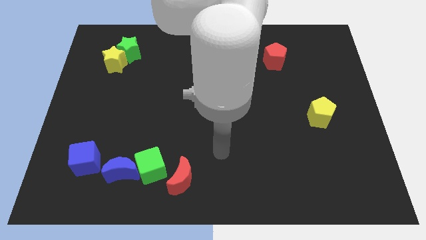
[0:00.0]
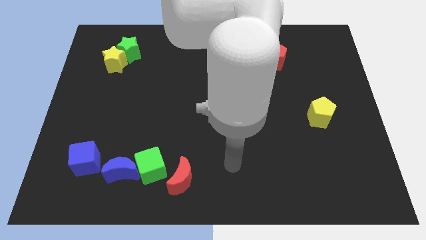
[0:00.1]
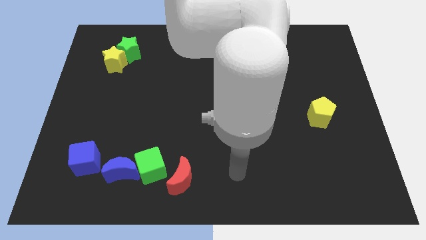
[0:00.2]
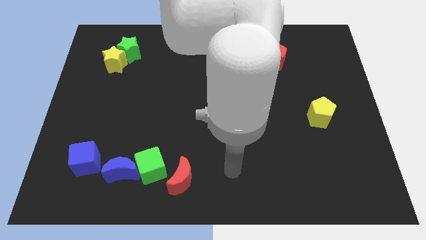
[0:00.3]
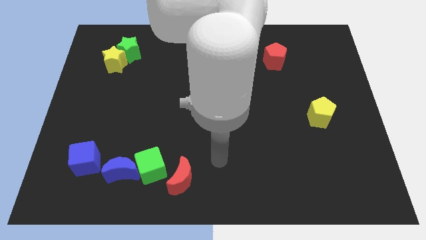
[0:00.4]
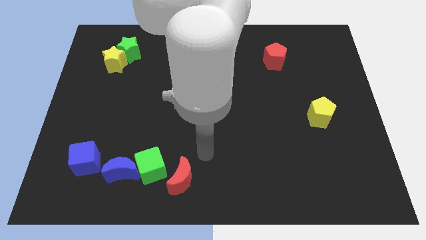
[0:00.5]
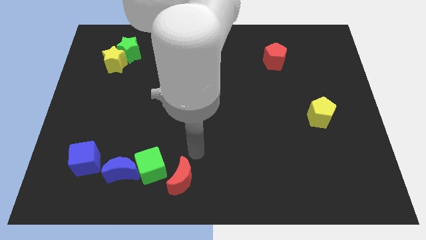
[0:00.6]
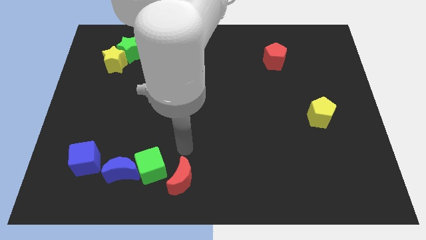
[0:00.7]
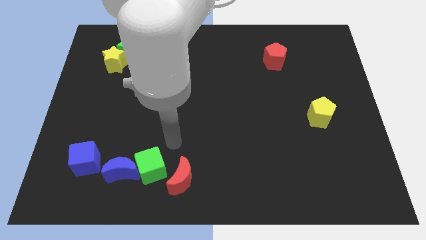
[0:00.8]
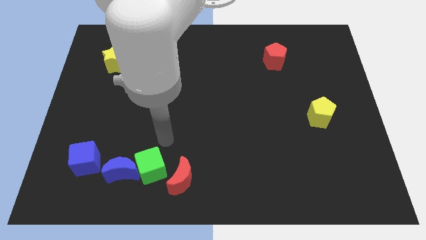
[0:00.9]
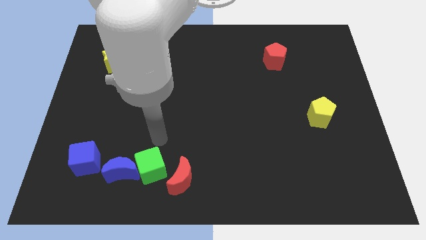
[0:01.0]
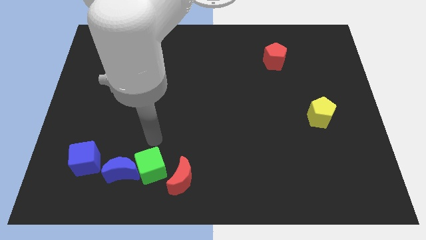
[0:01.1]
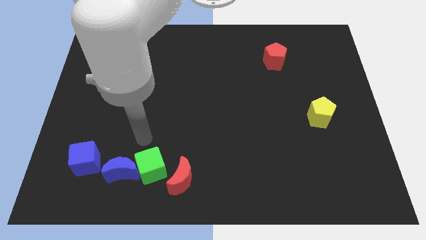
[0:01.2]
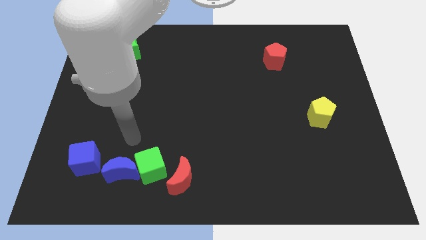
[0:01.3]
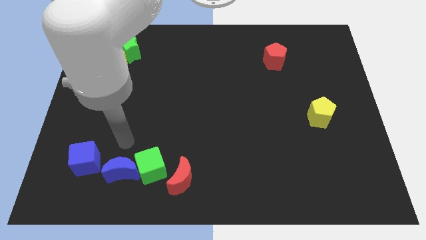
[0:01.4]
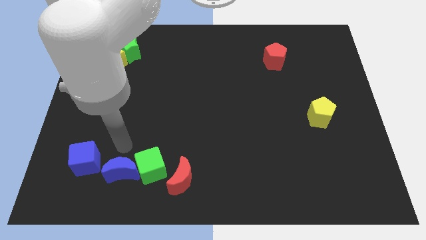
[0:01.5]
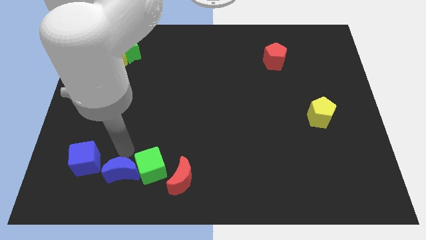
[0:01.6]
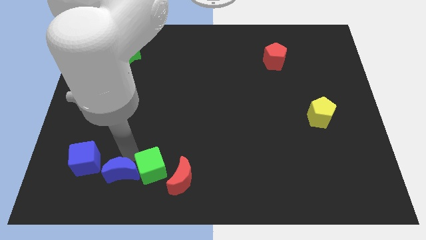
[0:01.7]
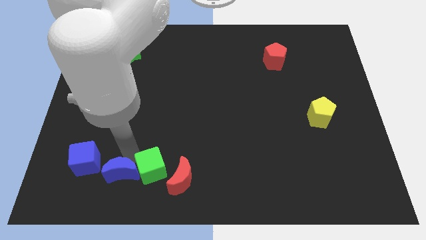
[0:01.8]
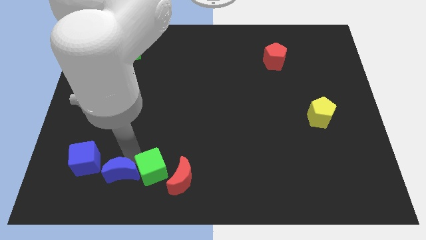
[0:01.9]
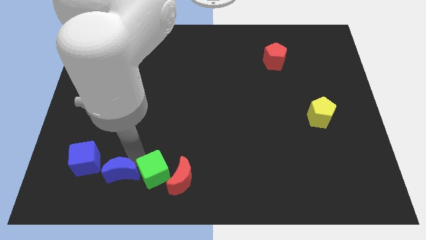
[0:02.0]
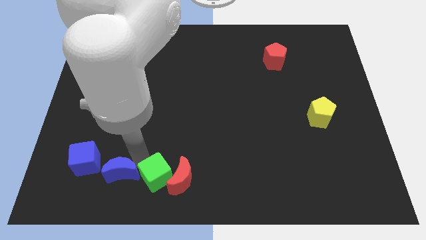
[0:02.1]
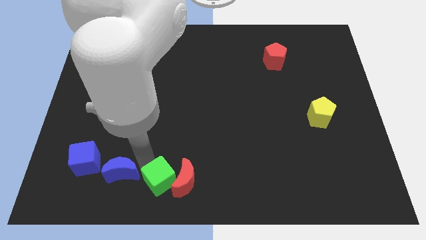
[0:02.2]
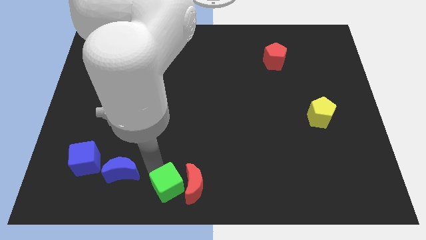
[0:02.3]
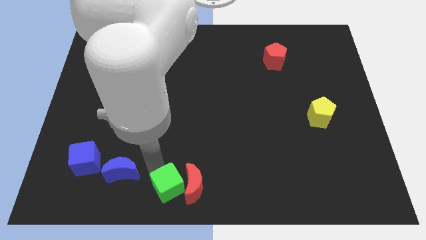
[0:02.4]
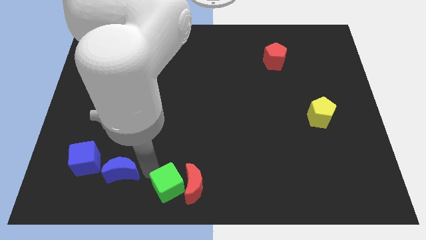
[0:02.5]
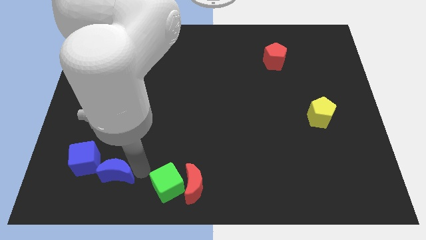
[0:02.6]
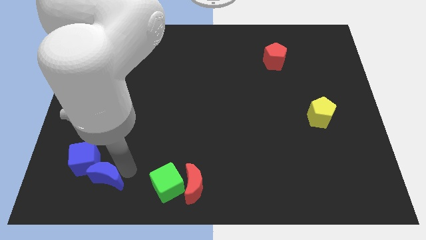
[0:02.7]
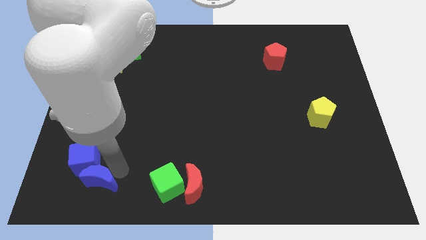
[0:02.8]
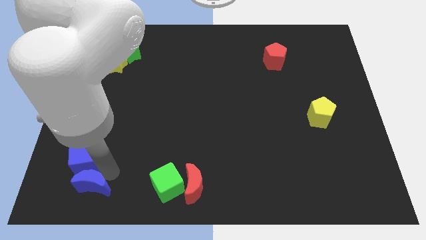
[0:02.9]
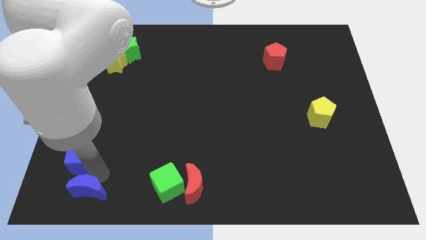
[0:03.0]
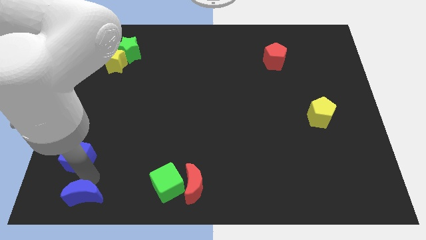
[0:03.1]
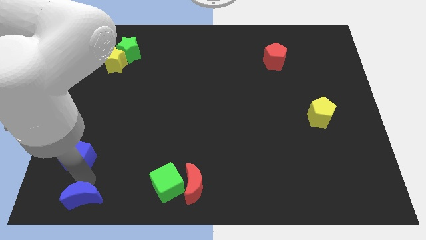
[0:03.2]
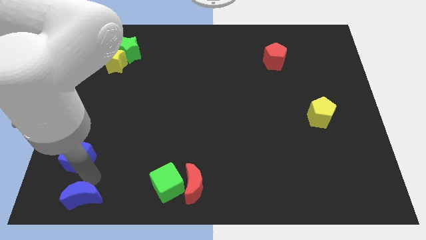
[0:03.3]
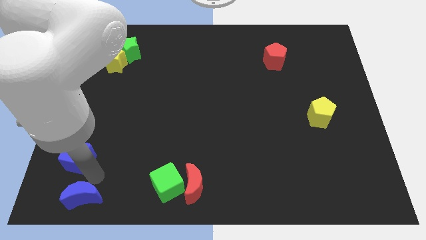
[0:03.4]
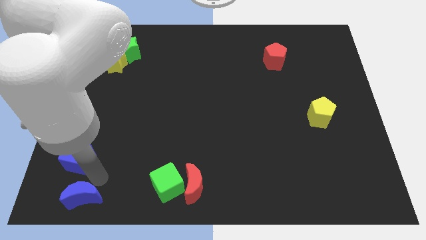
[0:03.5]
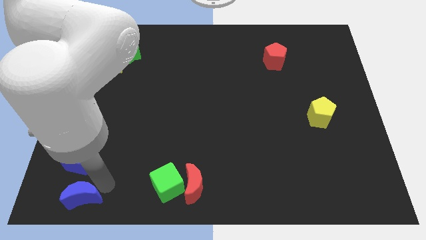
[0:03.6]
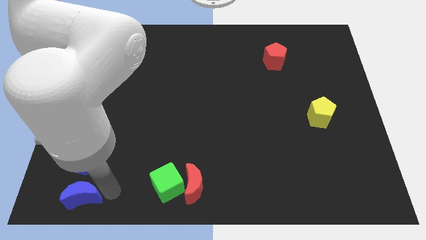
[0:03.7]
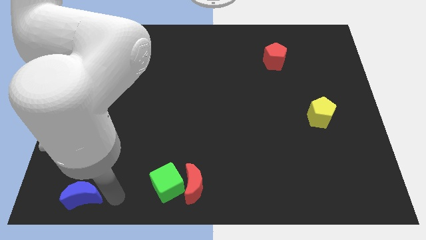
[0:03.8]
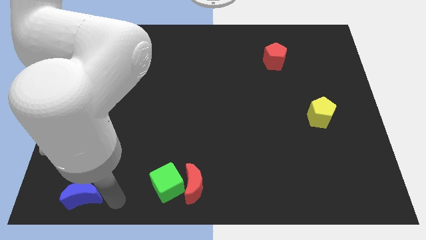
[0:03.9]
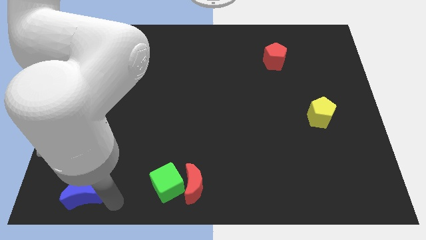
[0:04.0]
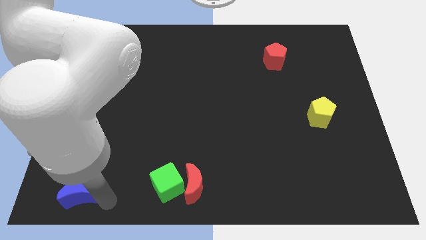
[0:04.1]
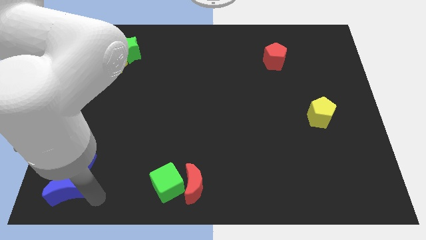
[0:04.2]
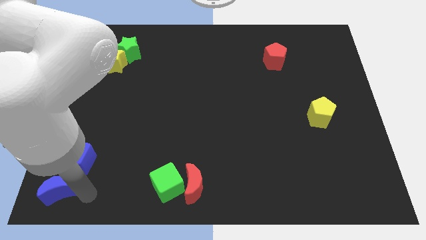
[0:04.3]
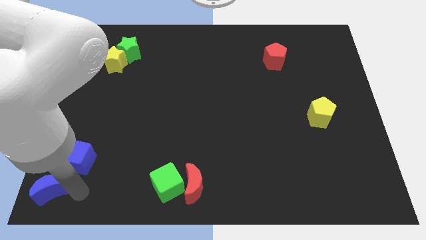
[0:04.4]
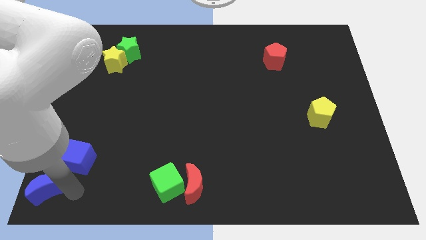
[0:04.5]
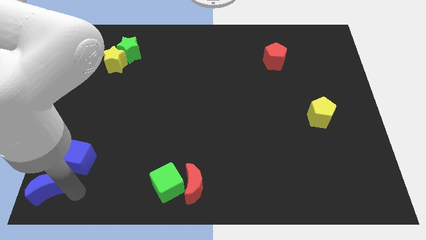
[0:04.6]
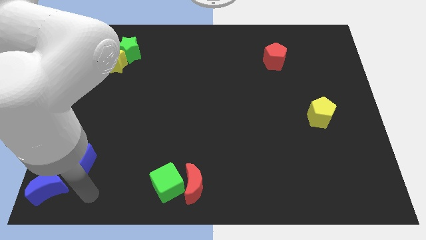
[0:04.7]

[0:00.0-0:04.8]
separate the group of blocks at the bottom left corner

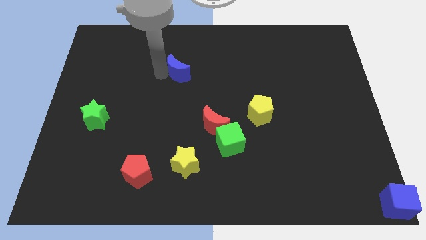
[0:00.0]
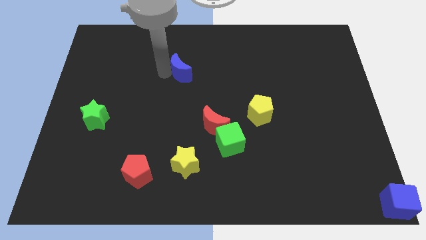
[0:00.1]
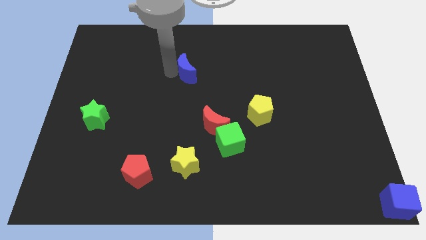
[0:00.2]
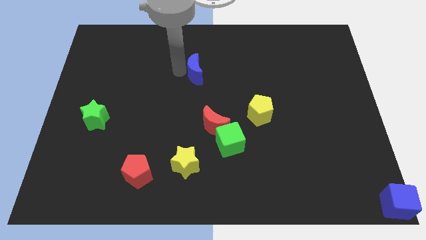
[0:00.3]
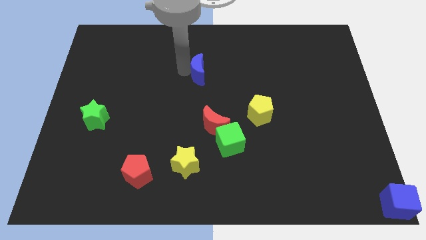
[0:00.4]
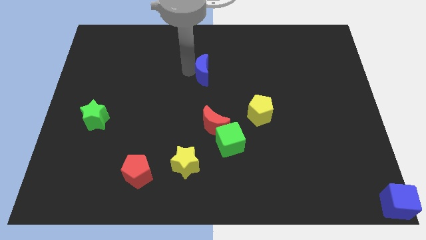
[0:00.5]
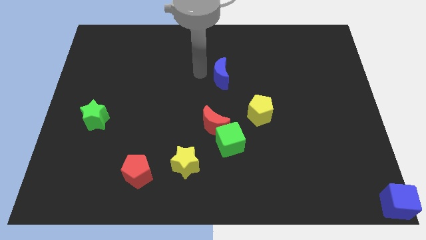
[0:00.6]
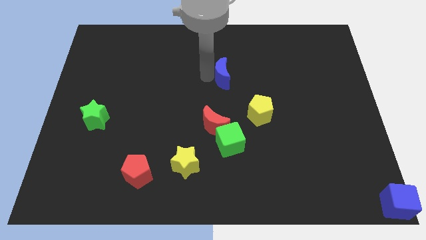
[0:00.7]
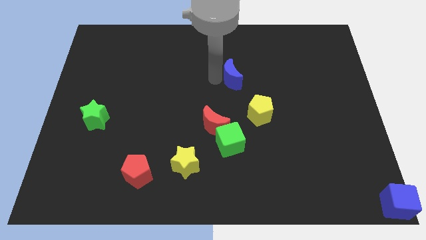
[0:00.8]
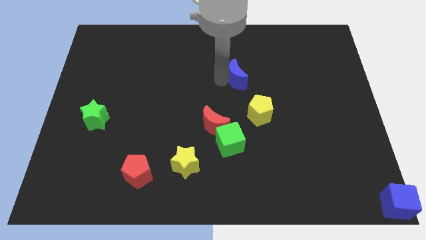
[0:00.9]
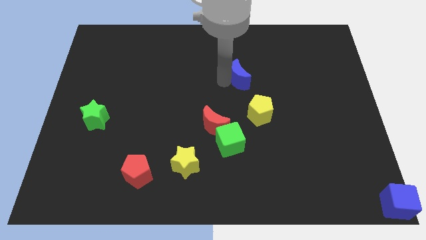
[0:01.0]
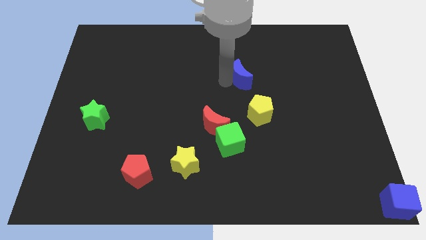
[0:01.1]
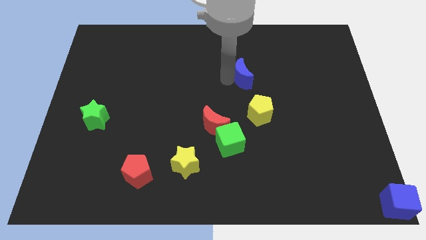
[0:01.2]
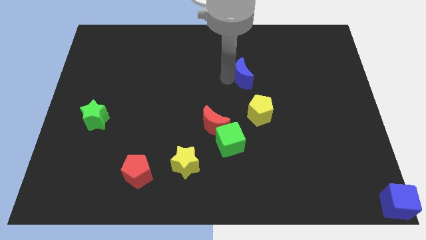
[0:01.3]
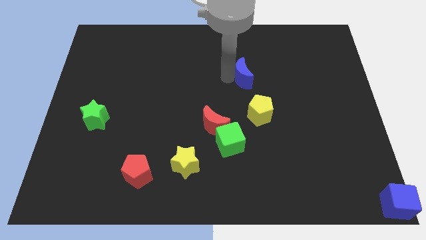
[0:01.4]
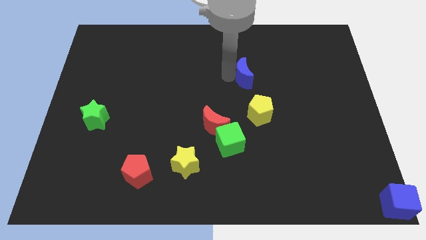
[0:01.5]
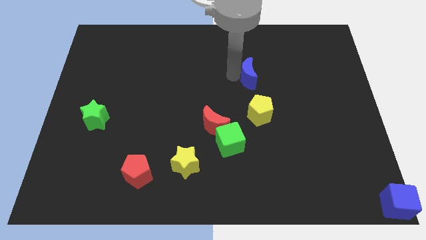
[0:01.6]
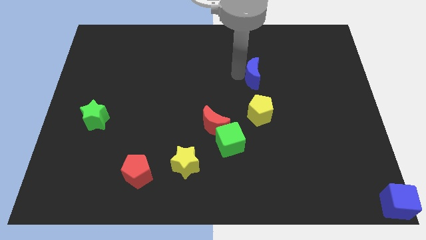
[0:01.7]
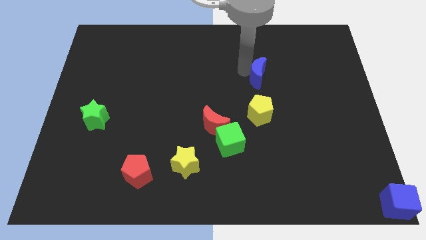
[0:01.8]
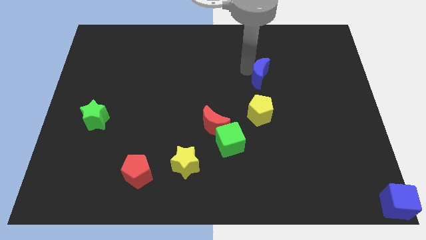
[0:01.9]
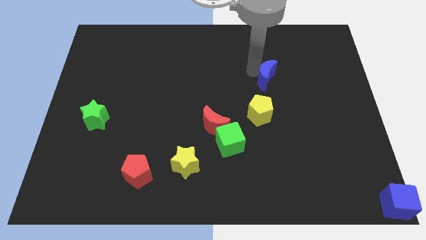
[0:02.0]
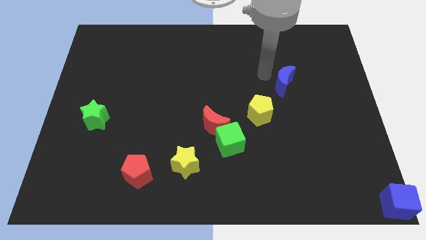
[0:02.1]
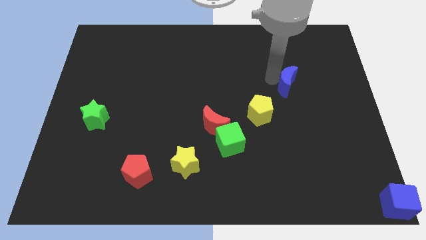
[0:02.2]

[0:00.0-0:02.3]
move the blue moon diagonally top right to the yellow pentagon

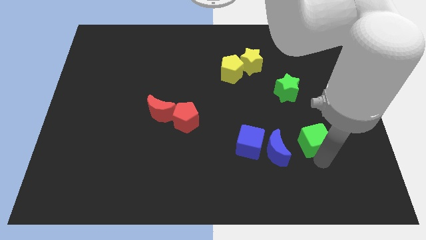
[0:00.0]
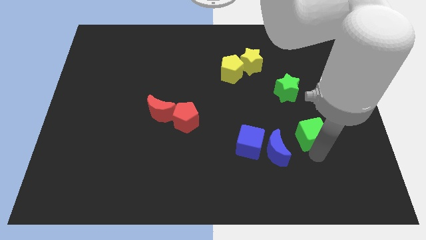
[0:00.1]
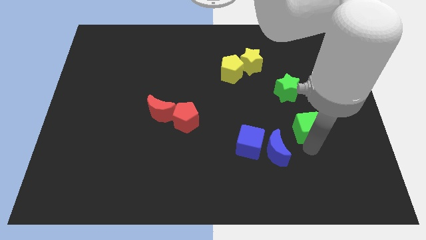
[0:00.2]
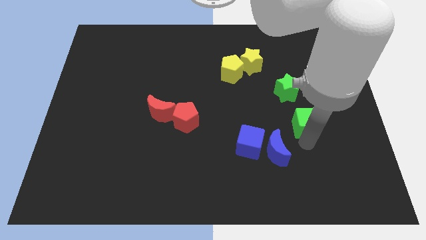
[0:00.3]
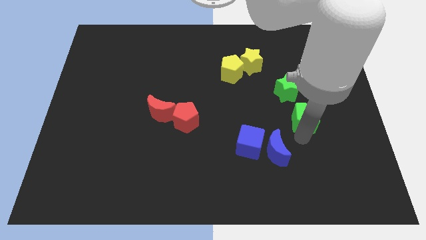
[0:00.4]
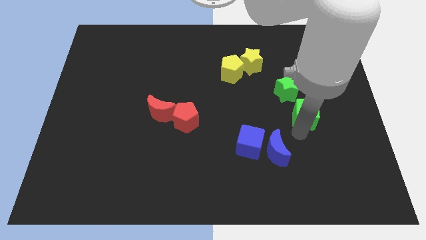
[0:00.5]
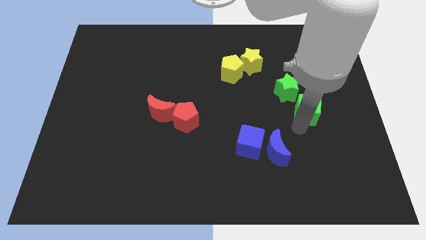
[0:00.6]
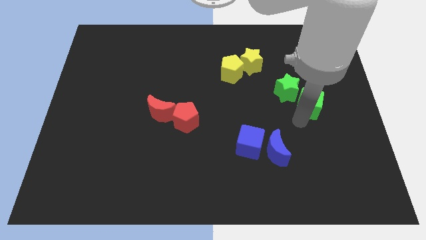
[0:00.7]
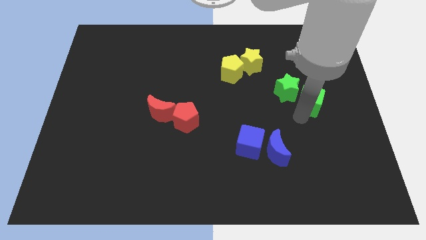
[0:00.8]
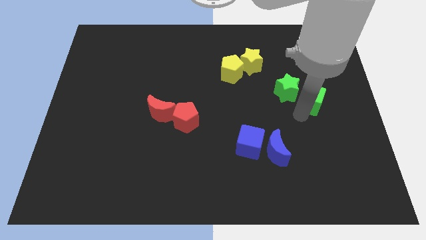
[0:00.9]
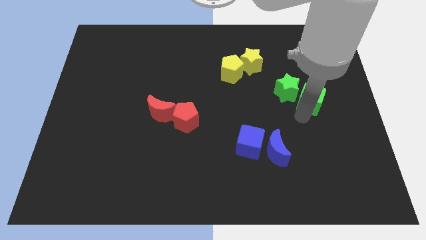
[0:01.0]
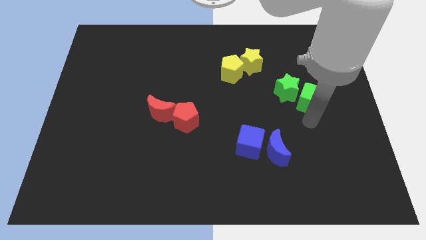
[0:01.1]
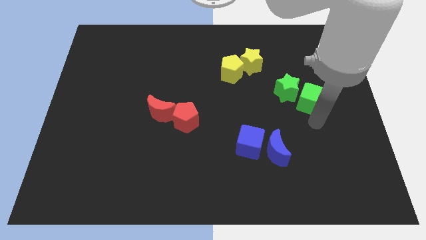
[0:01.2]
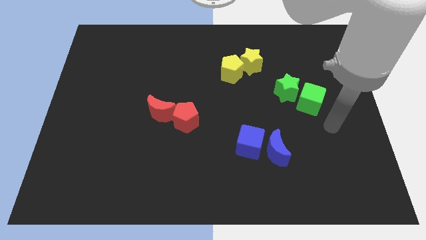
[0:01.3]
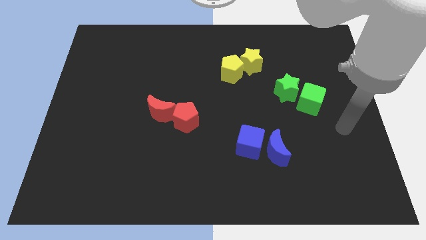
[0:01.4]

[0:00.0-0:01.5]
move the green cube bottom right to the green star

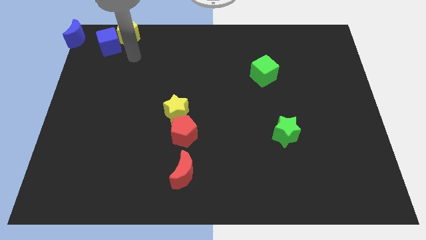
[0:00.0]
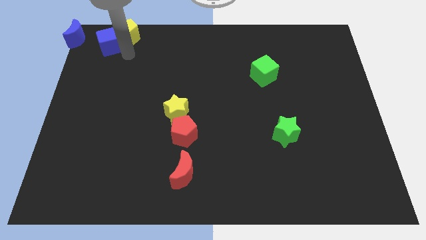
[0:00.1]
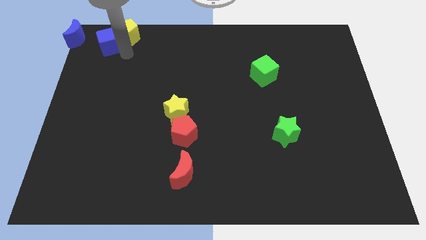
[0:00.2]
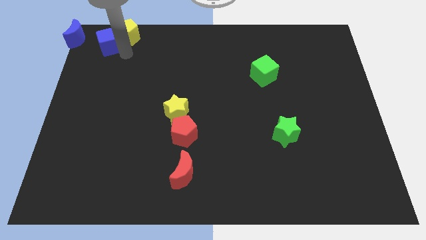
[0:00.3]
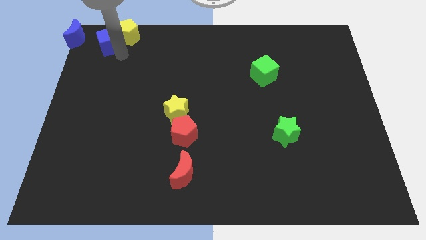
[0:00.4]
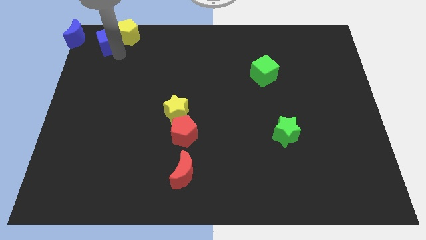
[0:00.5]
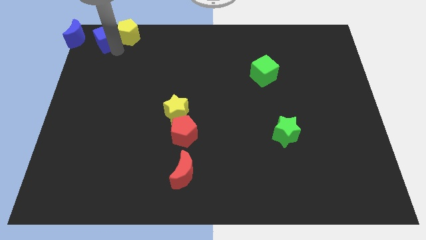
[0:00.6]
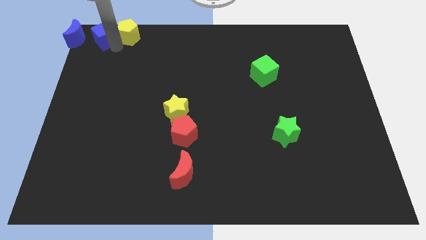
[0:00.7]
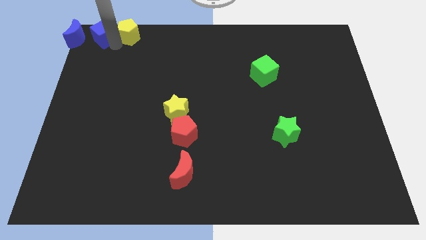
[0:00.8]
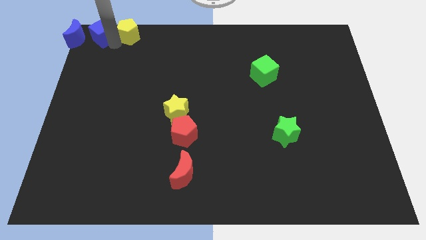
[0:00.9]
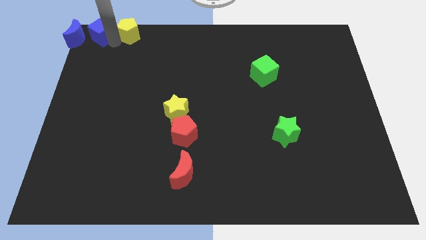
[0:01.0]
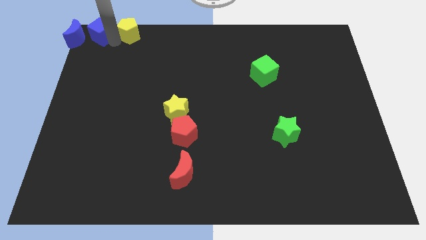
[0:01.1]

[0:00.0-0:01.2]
push the blue cube towards the right of the blue crescent
